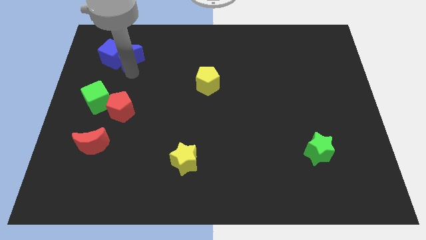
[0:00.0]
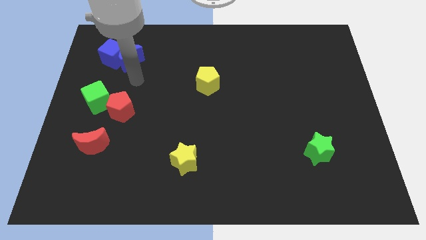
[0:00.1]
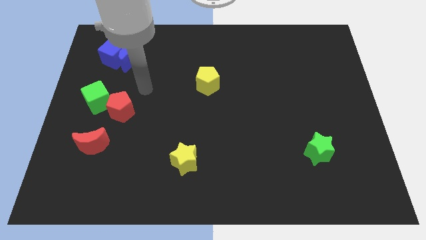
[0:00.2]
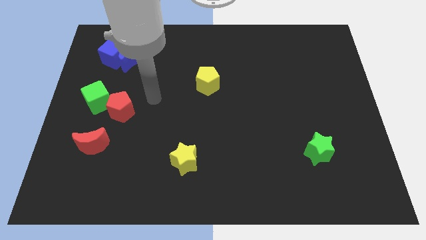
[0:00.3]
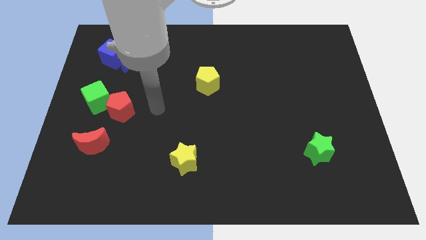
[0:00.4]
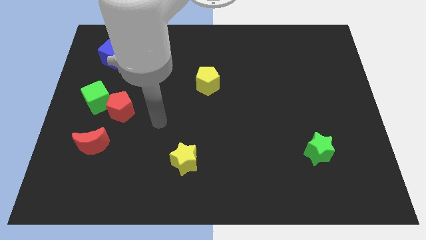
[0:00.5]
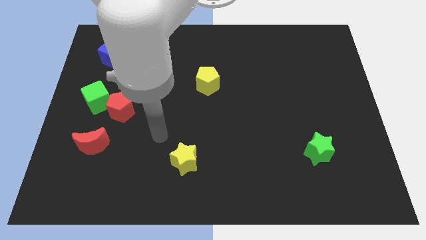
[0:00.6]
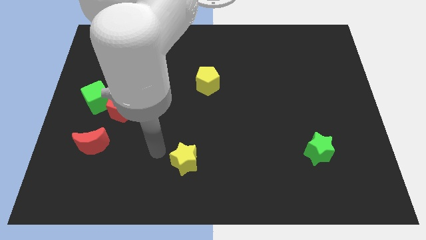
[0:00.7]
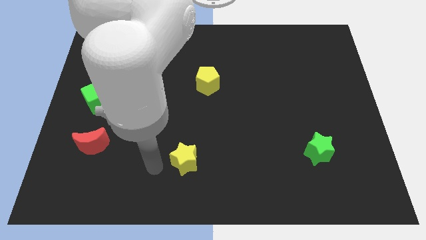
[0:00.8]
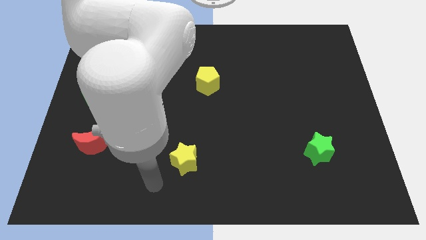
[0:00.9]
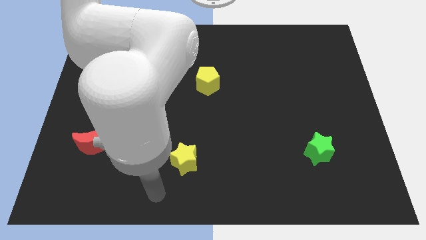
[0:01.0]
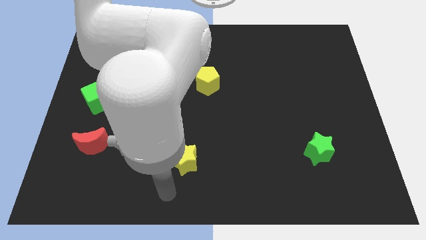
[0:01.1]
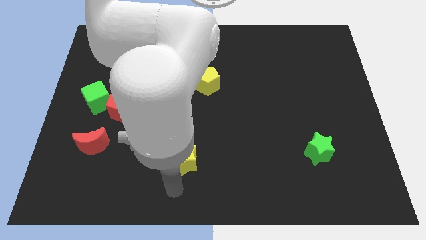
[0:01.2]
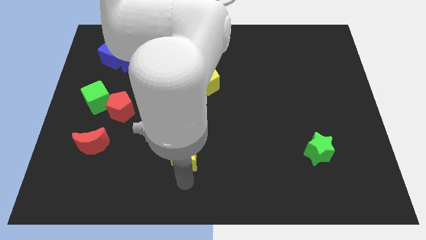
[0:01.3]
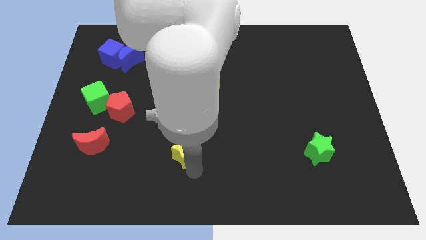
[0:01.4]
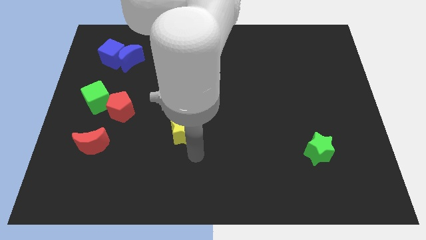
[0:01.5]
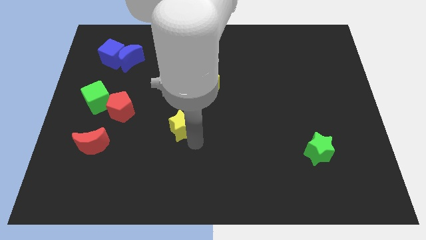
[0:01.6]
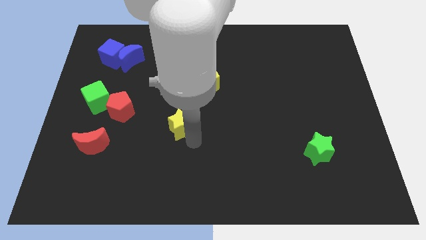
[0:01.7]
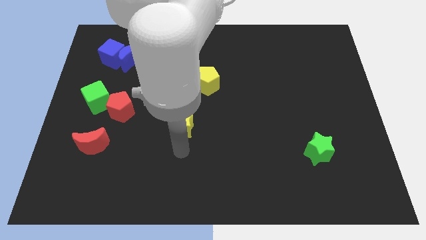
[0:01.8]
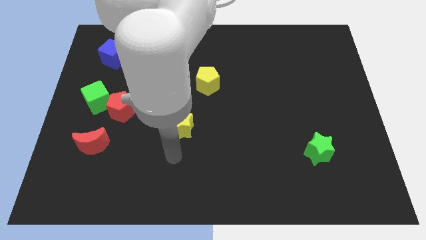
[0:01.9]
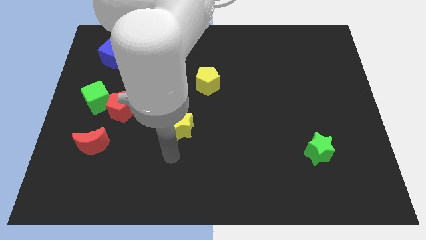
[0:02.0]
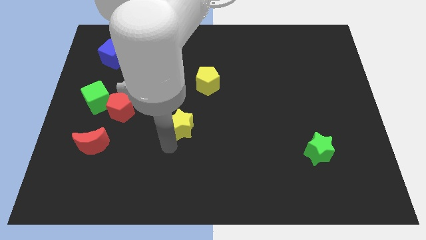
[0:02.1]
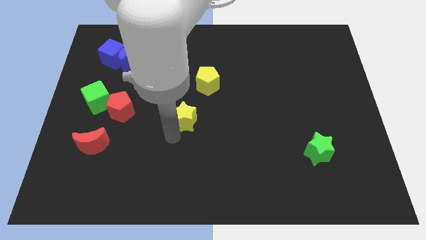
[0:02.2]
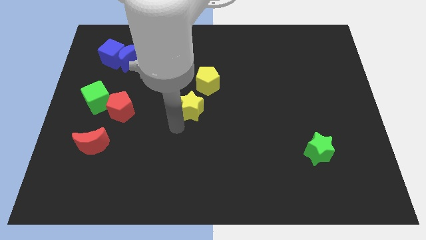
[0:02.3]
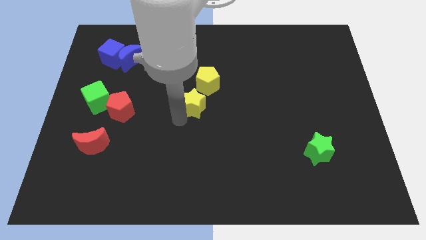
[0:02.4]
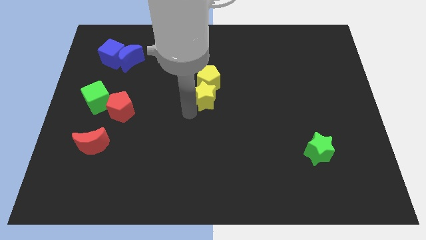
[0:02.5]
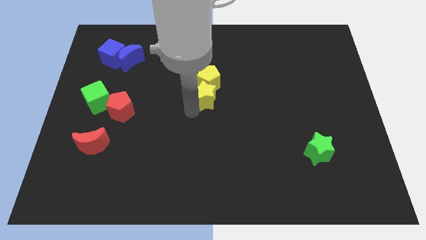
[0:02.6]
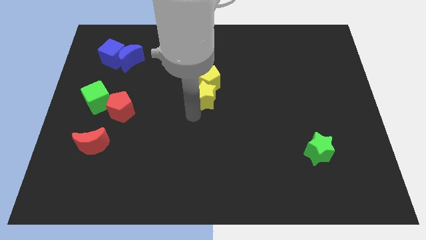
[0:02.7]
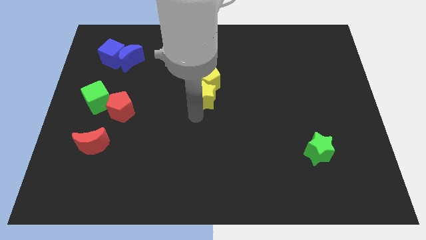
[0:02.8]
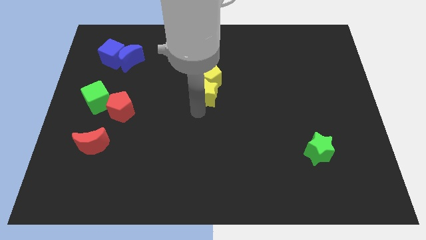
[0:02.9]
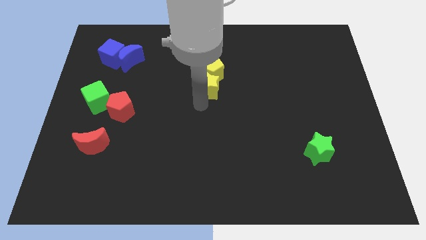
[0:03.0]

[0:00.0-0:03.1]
drag the yellow star close to yellow pentagon

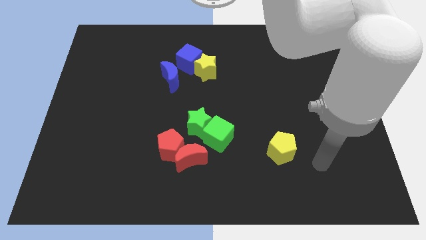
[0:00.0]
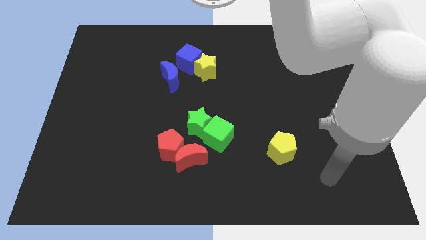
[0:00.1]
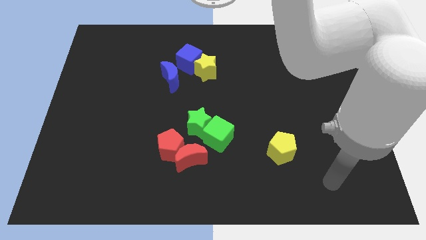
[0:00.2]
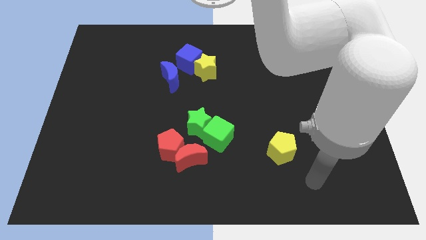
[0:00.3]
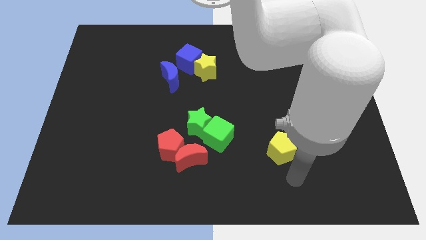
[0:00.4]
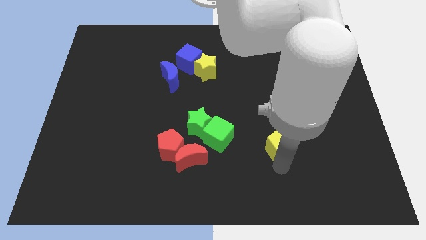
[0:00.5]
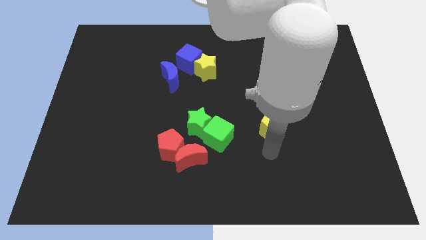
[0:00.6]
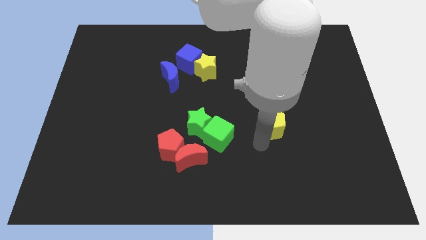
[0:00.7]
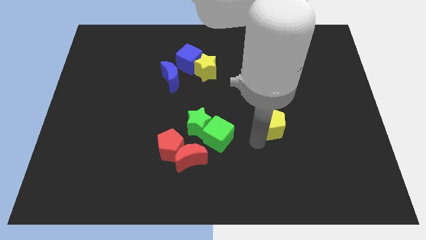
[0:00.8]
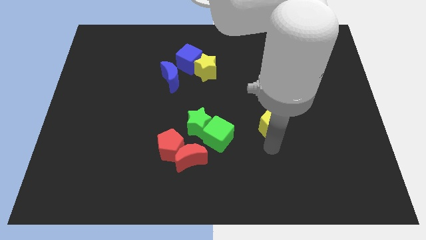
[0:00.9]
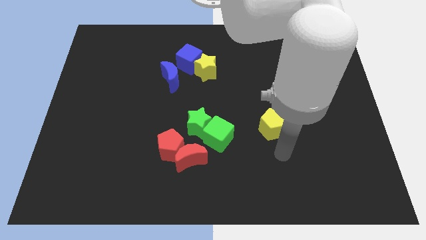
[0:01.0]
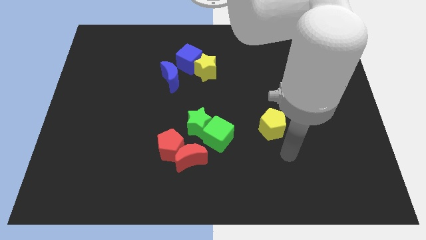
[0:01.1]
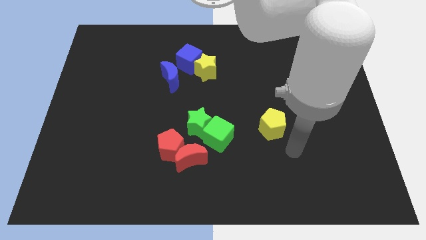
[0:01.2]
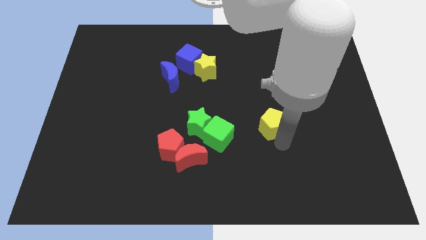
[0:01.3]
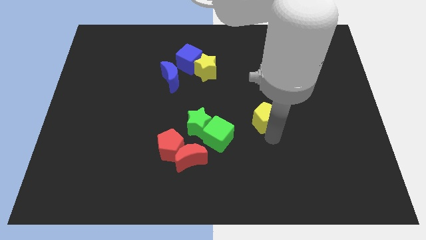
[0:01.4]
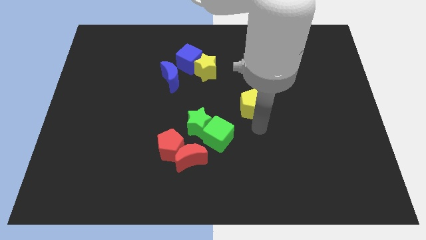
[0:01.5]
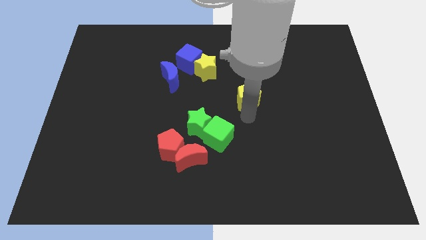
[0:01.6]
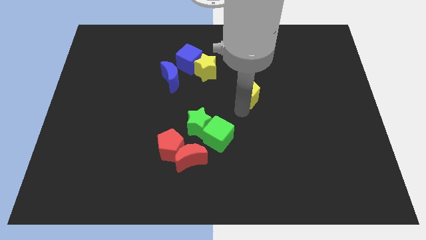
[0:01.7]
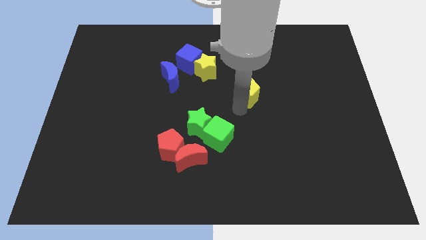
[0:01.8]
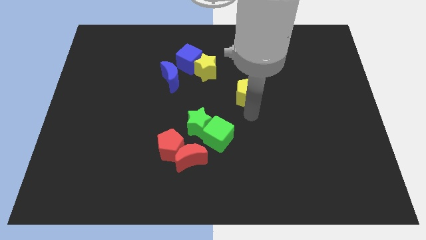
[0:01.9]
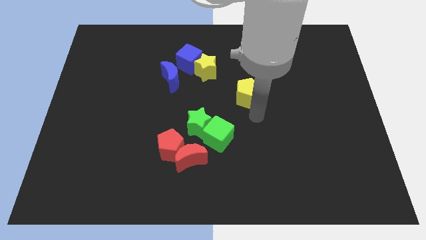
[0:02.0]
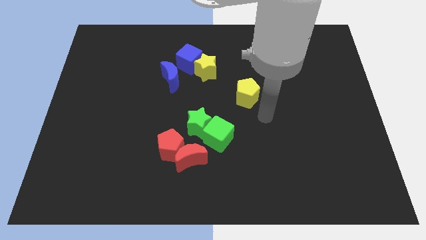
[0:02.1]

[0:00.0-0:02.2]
move the yellow pentagon diagonal right of green cube

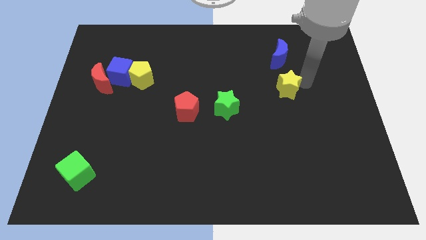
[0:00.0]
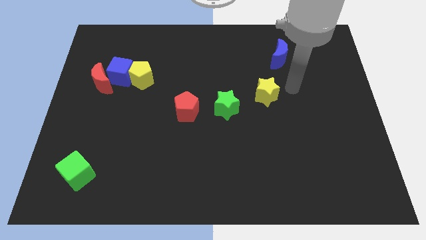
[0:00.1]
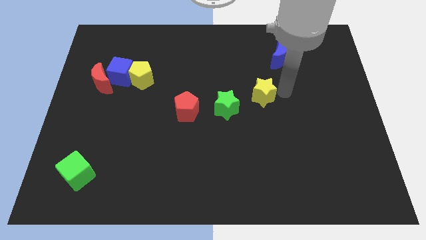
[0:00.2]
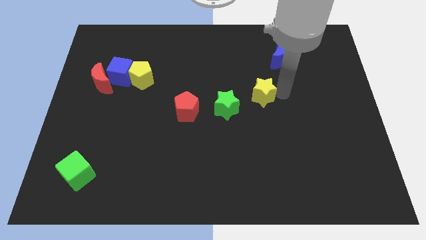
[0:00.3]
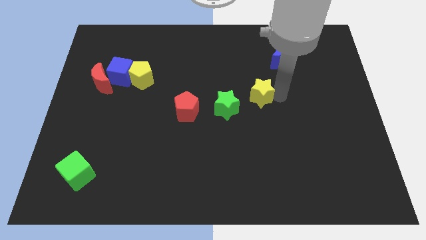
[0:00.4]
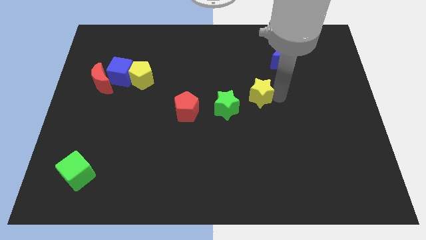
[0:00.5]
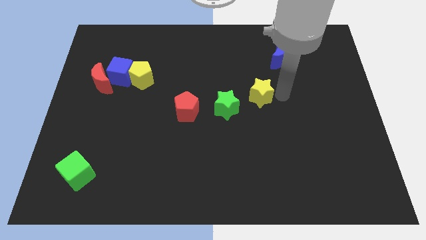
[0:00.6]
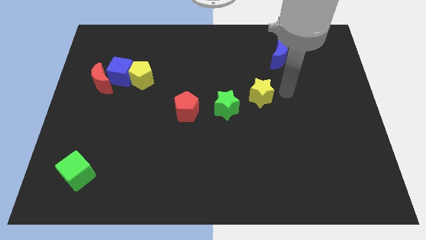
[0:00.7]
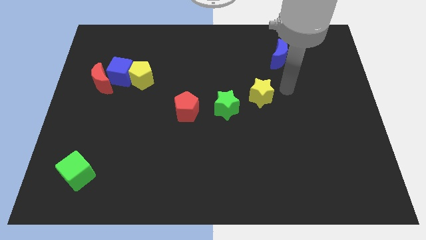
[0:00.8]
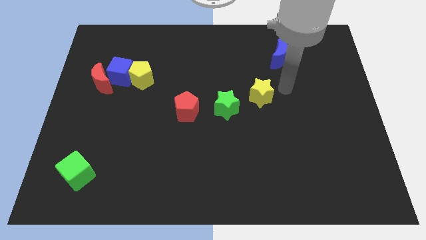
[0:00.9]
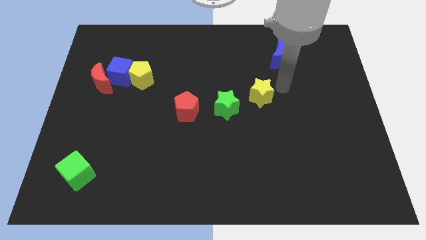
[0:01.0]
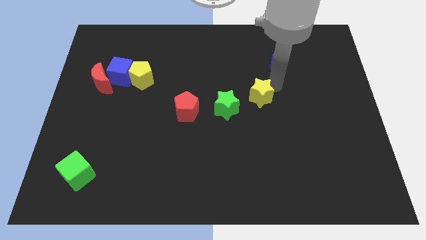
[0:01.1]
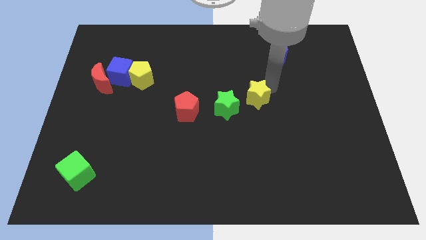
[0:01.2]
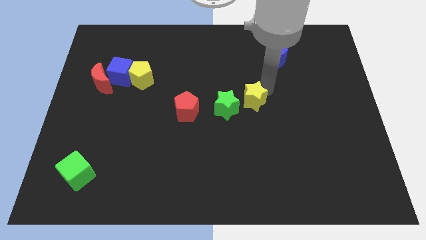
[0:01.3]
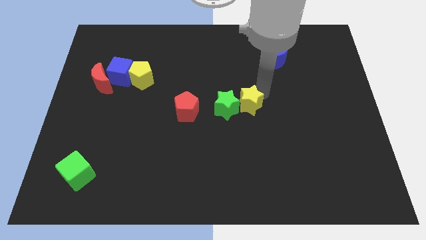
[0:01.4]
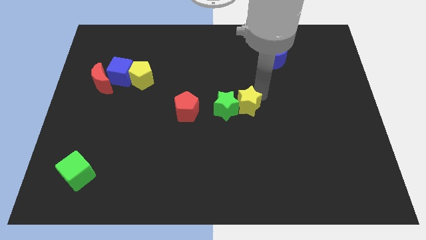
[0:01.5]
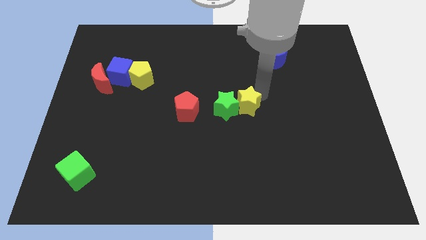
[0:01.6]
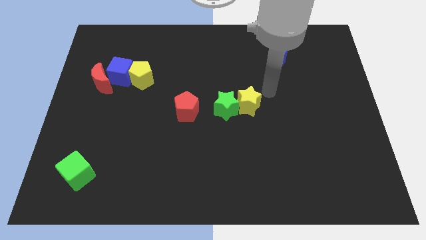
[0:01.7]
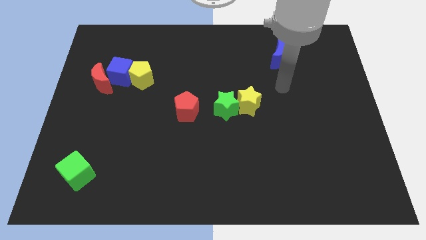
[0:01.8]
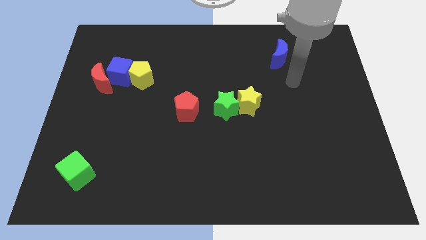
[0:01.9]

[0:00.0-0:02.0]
slide the yellow star into the green star

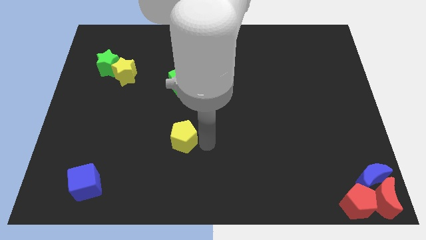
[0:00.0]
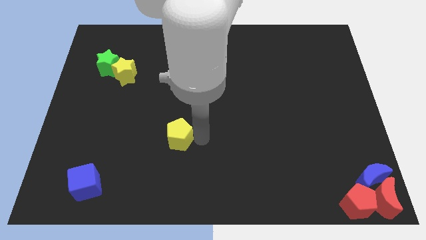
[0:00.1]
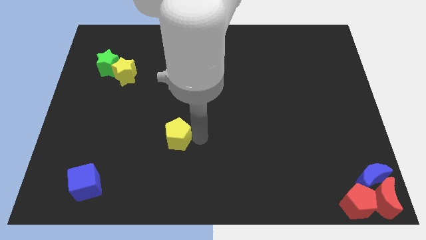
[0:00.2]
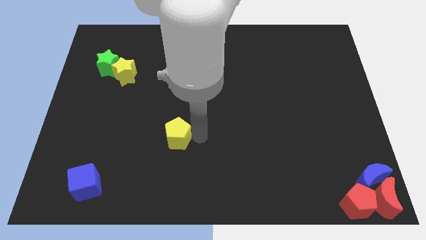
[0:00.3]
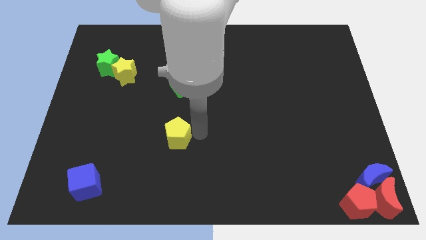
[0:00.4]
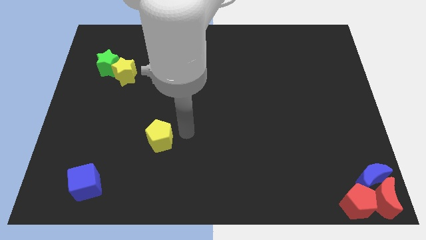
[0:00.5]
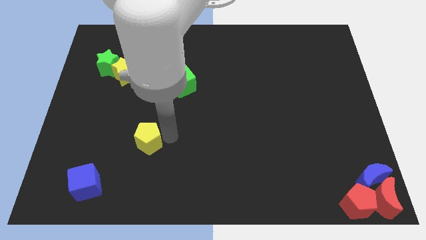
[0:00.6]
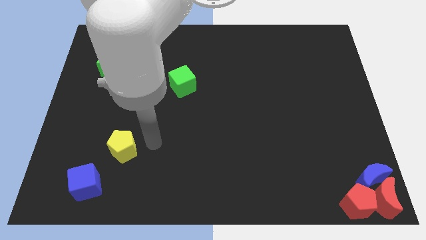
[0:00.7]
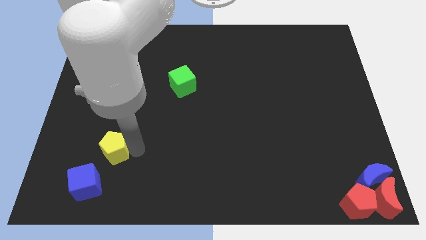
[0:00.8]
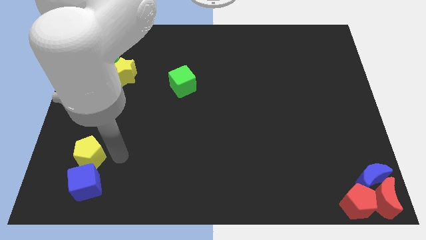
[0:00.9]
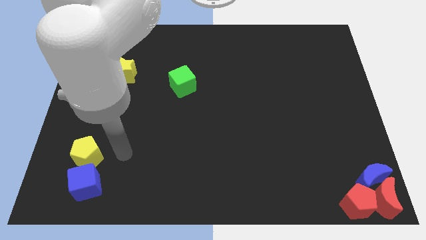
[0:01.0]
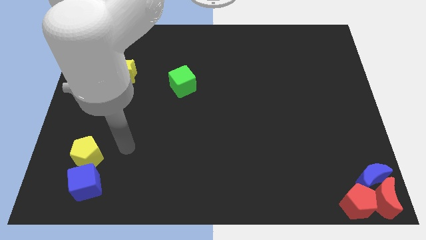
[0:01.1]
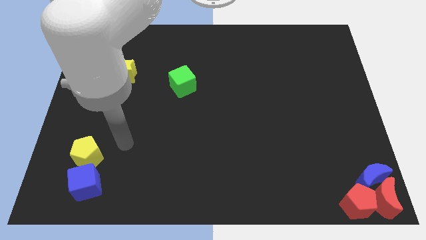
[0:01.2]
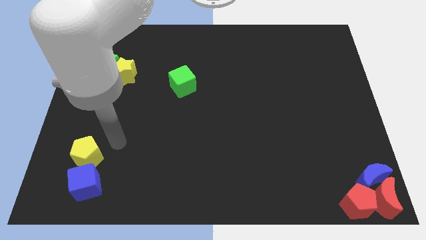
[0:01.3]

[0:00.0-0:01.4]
slide the yellow pentagon to the top side of the blue cube

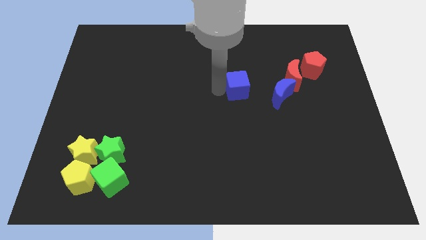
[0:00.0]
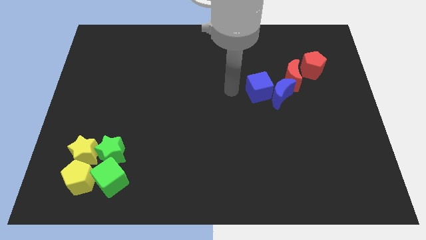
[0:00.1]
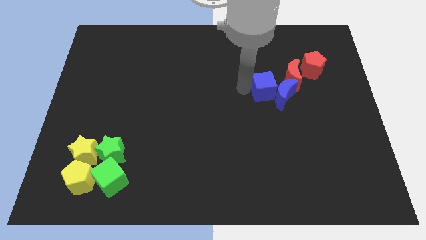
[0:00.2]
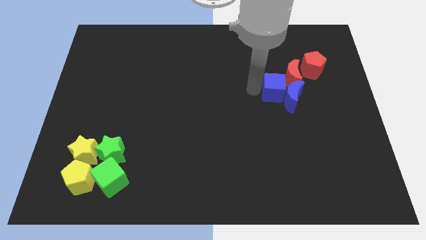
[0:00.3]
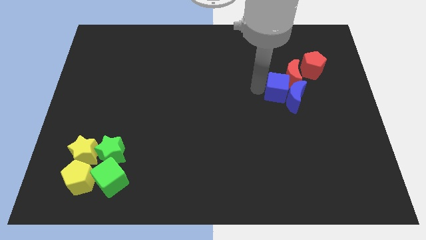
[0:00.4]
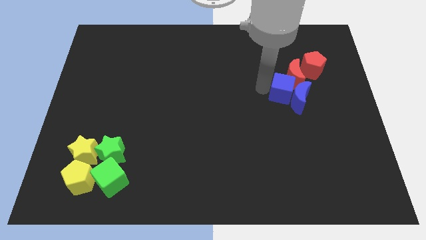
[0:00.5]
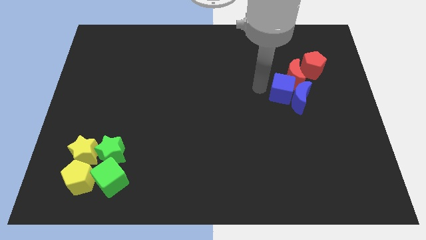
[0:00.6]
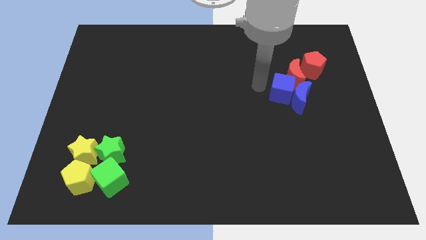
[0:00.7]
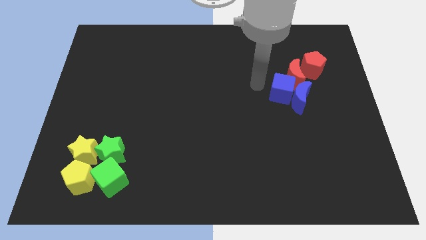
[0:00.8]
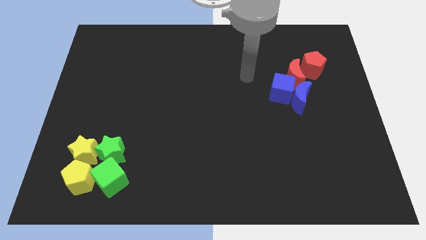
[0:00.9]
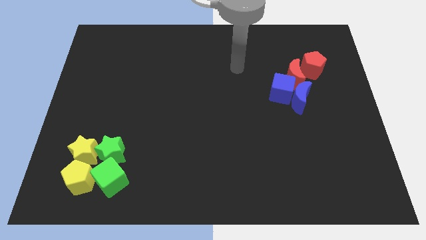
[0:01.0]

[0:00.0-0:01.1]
push the blue cube into the blue moon
